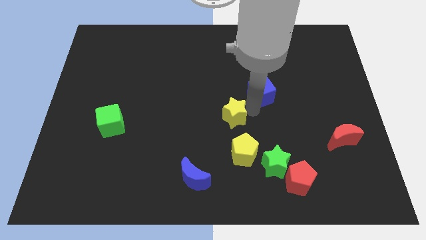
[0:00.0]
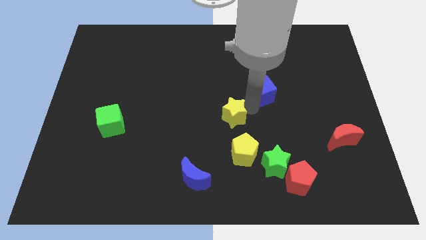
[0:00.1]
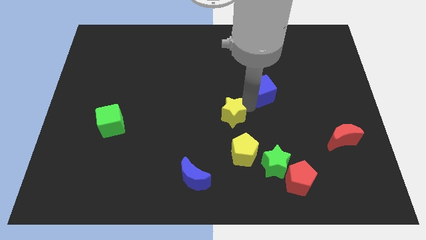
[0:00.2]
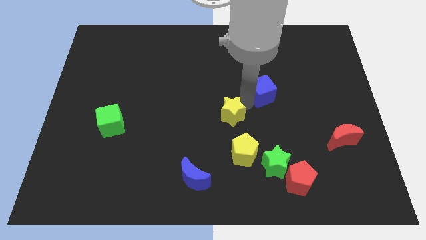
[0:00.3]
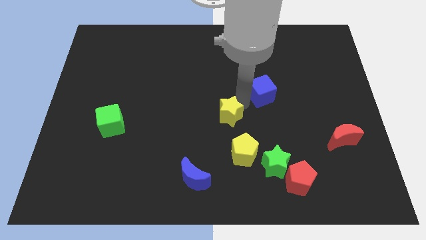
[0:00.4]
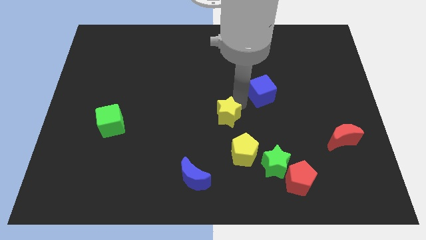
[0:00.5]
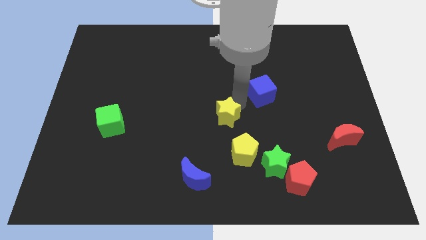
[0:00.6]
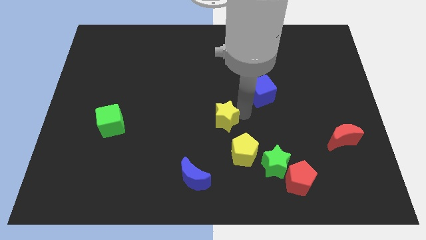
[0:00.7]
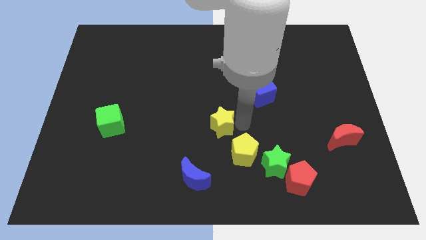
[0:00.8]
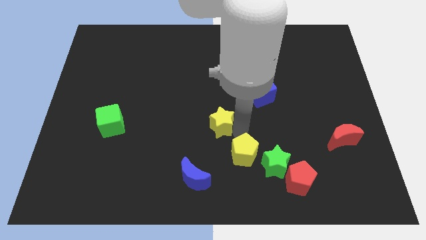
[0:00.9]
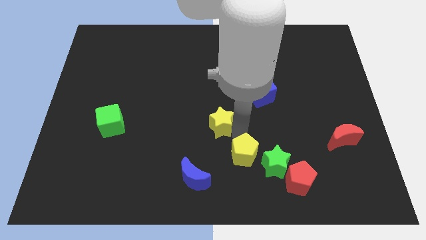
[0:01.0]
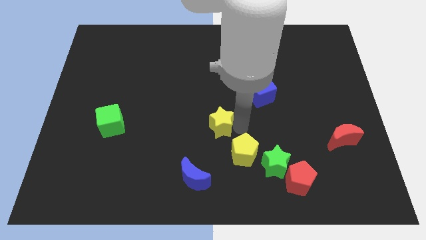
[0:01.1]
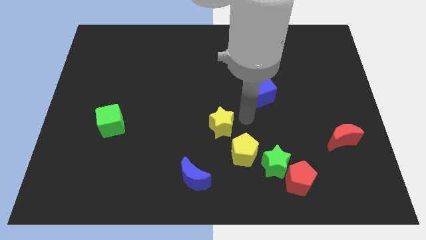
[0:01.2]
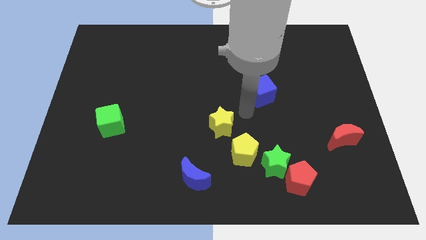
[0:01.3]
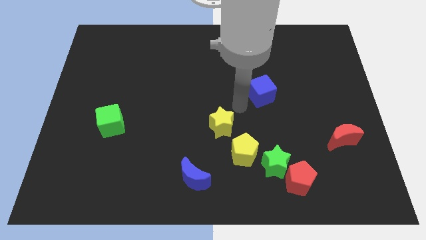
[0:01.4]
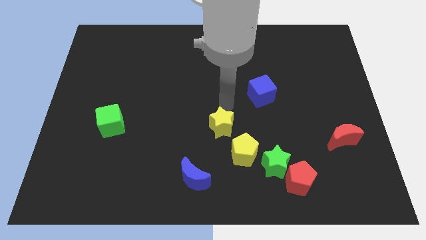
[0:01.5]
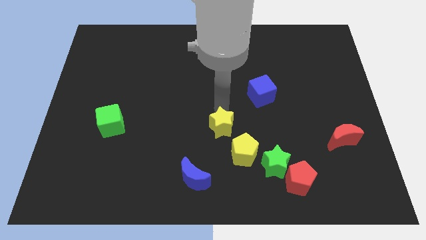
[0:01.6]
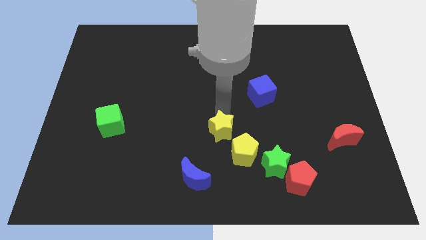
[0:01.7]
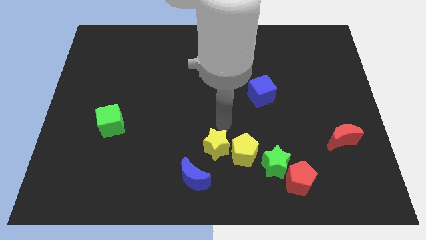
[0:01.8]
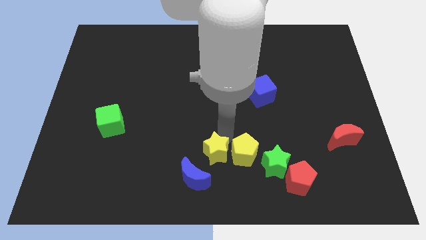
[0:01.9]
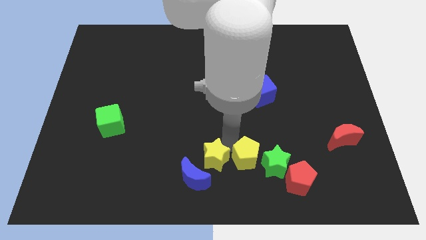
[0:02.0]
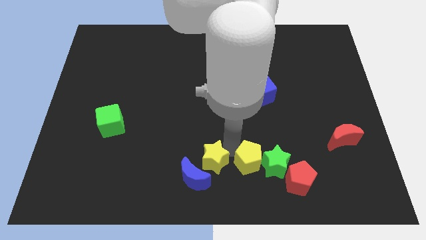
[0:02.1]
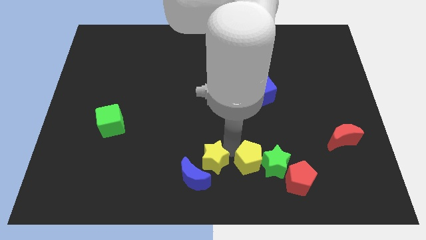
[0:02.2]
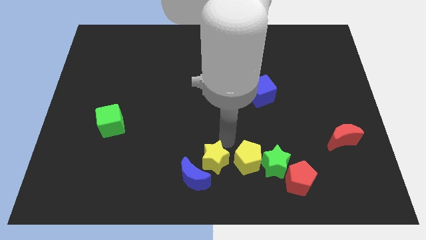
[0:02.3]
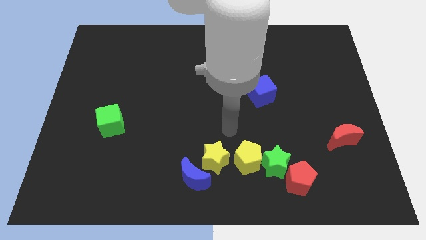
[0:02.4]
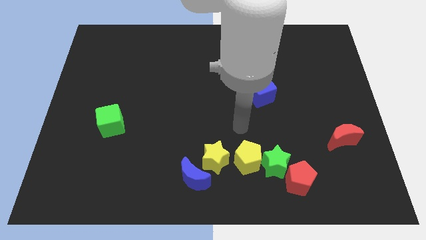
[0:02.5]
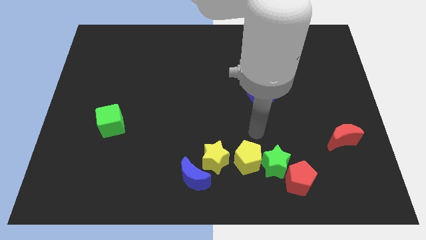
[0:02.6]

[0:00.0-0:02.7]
push the yellow star left to the yellow pentagon

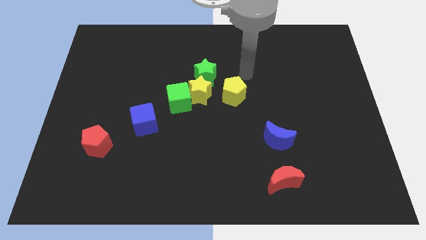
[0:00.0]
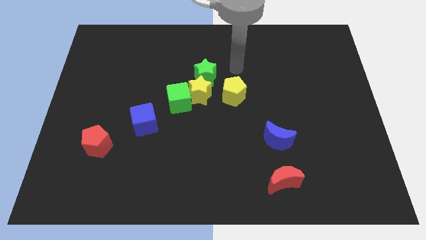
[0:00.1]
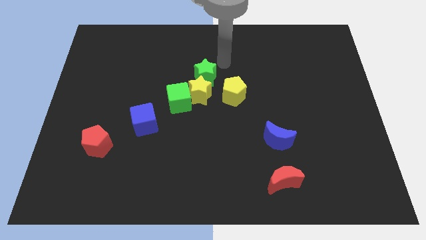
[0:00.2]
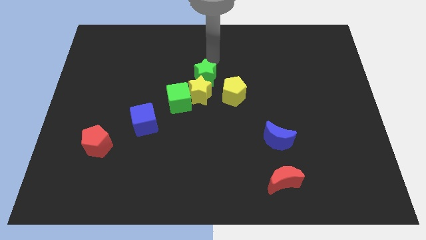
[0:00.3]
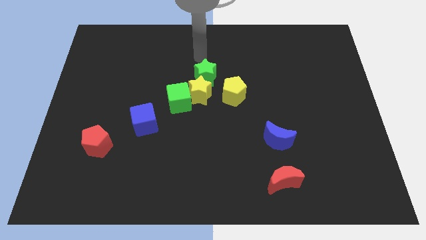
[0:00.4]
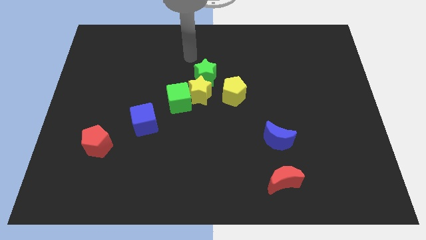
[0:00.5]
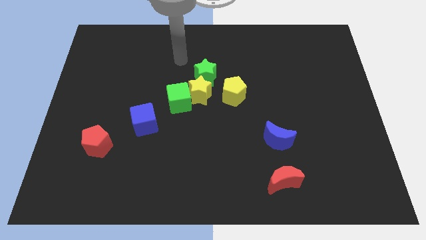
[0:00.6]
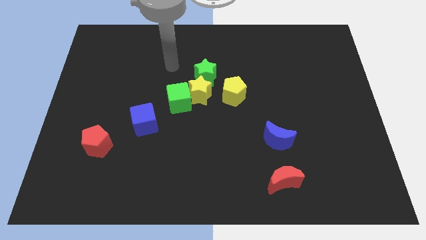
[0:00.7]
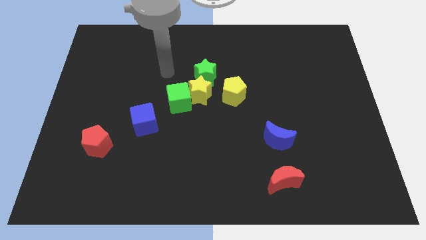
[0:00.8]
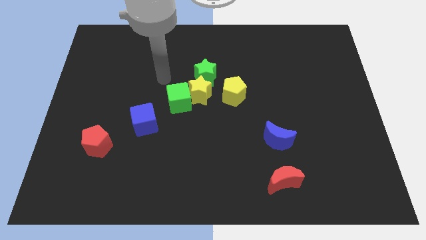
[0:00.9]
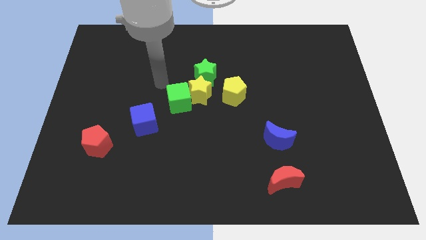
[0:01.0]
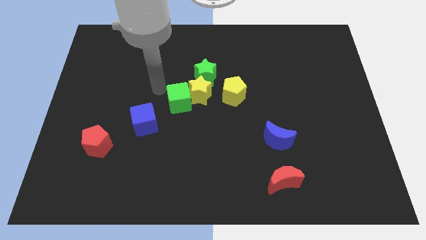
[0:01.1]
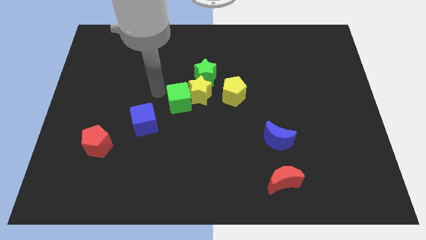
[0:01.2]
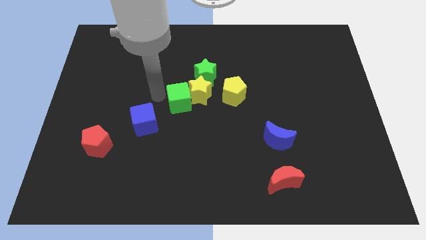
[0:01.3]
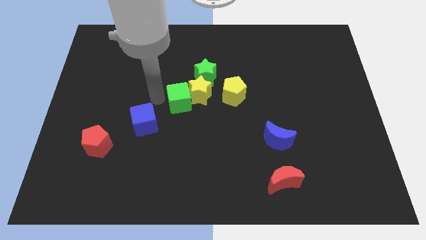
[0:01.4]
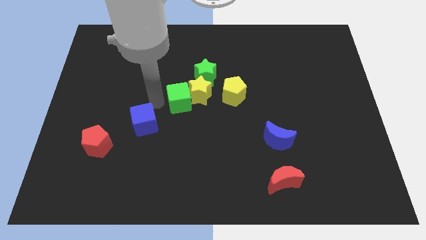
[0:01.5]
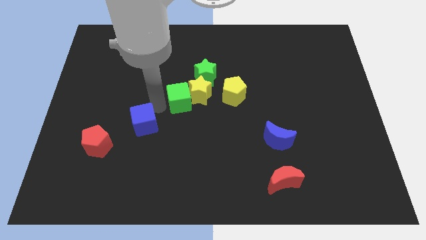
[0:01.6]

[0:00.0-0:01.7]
move your arm towards the left of the green cube

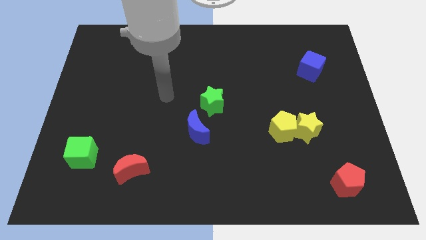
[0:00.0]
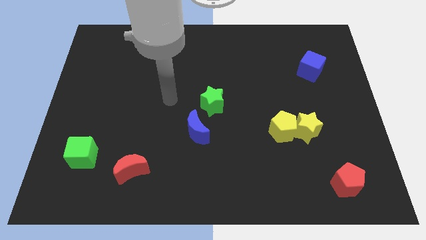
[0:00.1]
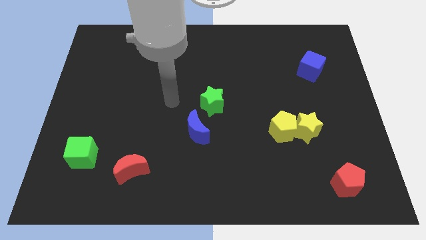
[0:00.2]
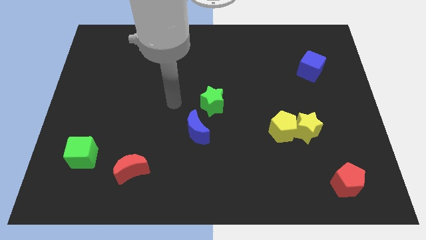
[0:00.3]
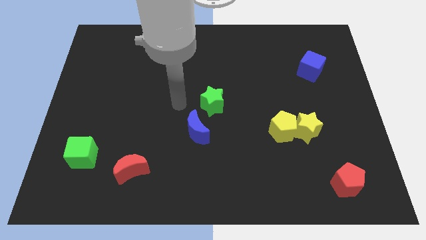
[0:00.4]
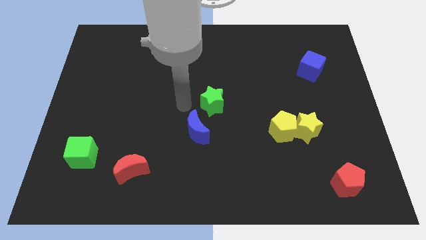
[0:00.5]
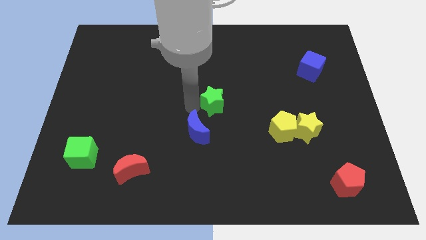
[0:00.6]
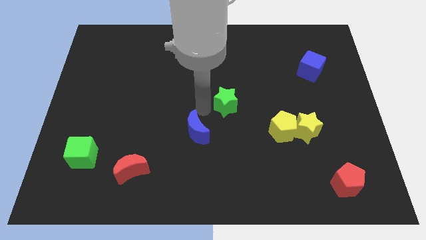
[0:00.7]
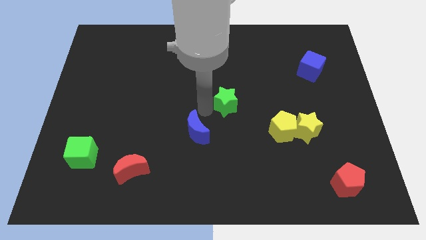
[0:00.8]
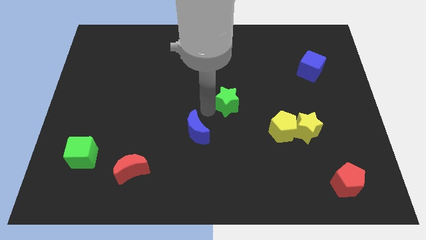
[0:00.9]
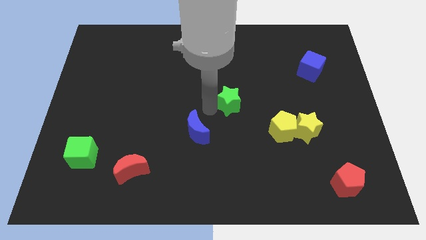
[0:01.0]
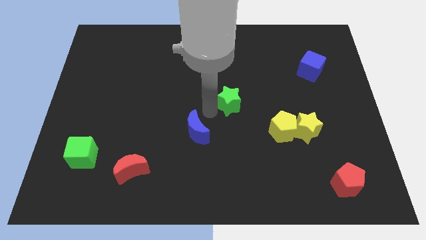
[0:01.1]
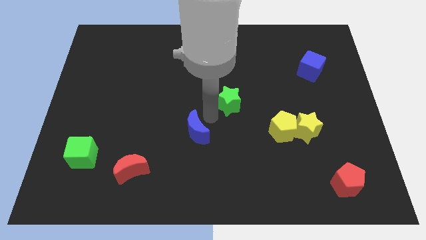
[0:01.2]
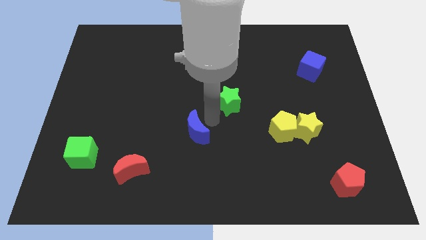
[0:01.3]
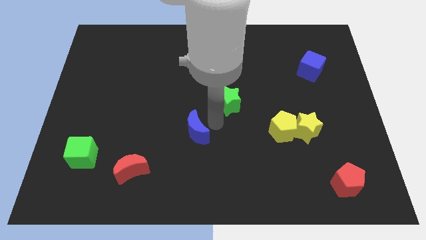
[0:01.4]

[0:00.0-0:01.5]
seperate green star and blue moon

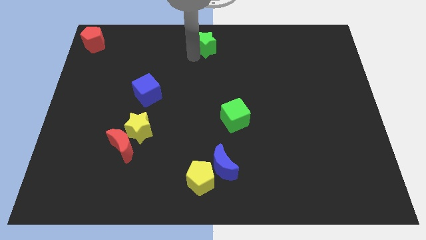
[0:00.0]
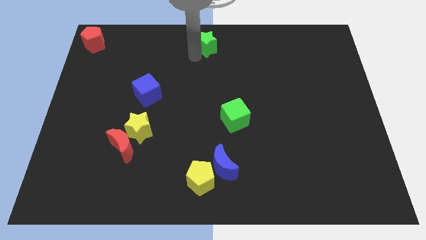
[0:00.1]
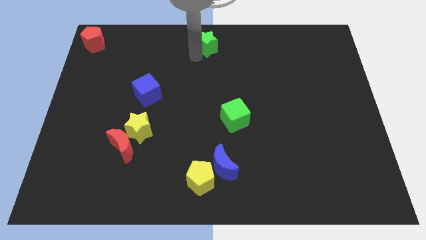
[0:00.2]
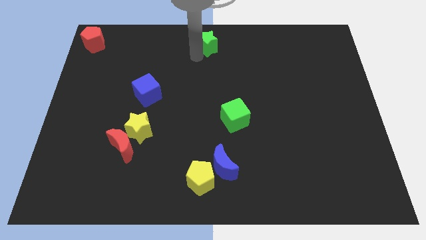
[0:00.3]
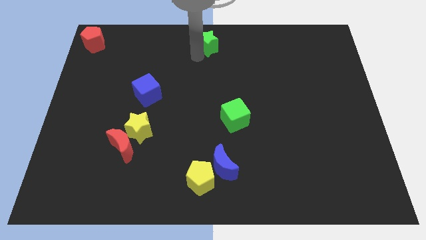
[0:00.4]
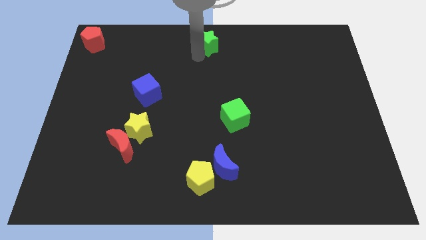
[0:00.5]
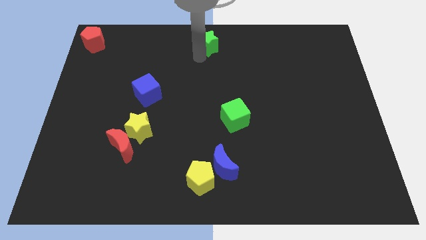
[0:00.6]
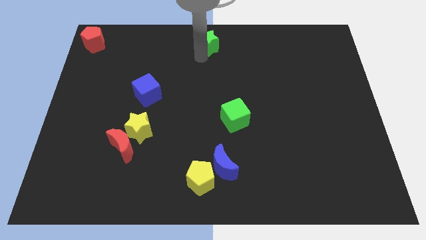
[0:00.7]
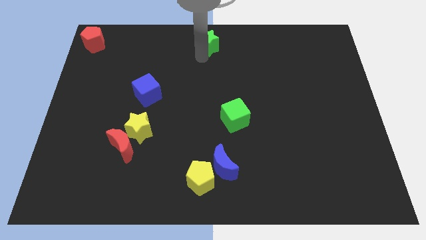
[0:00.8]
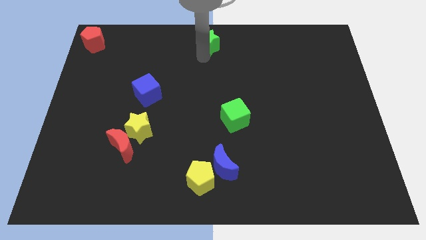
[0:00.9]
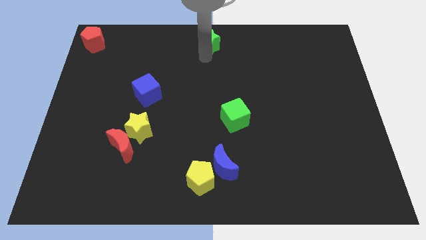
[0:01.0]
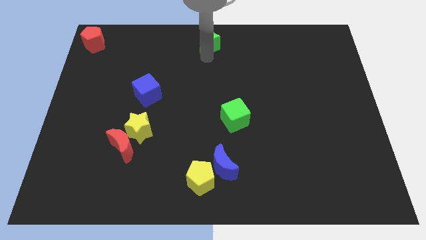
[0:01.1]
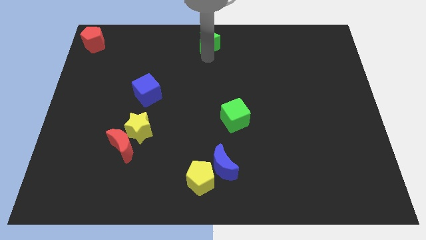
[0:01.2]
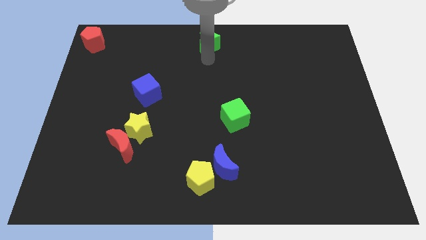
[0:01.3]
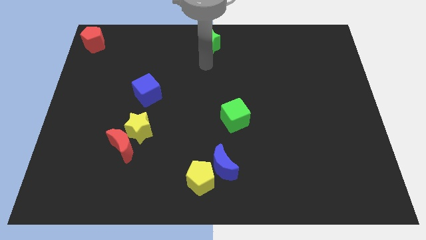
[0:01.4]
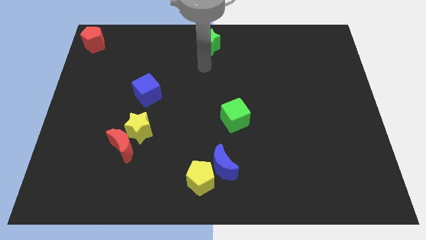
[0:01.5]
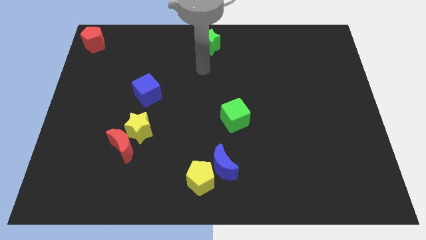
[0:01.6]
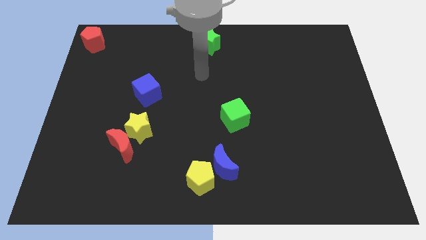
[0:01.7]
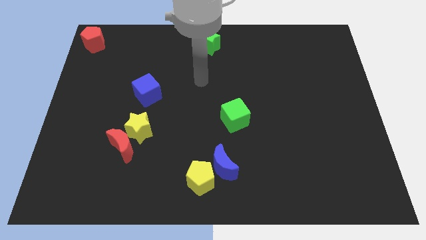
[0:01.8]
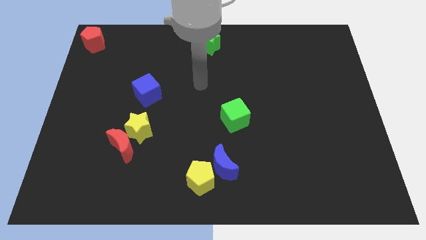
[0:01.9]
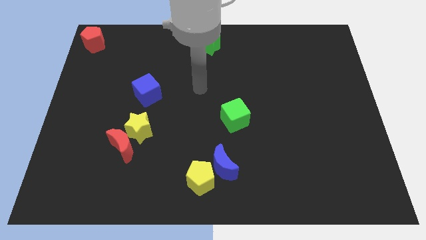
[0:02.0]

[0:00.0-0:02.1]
move green star to the top center

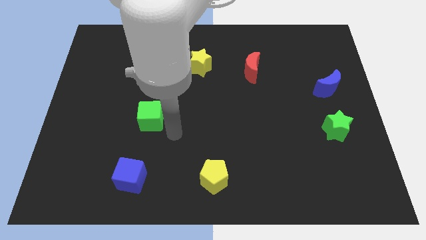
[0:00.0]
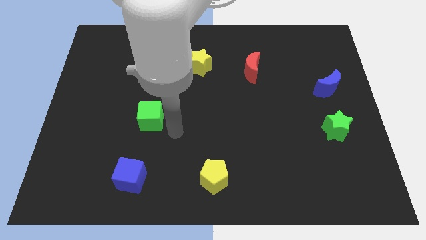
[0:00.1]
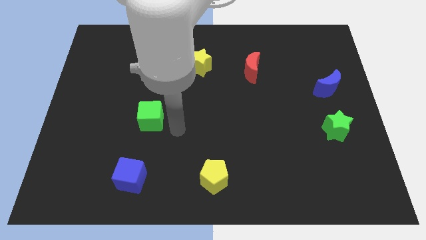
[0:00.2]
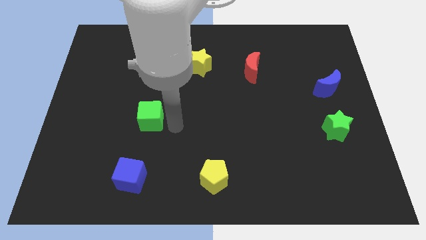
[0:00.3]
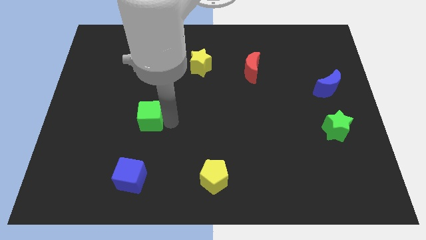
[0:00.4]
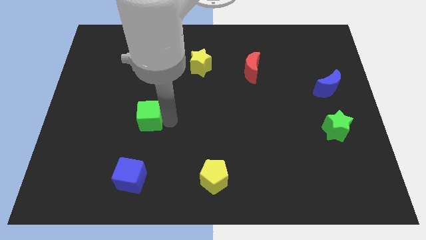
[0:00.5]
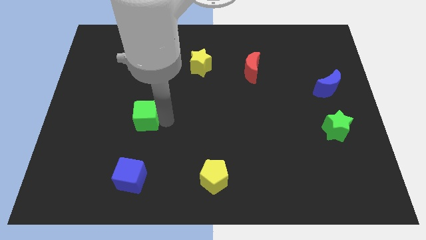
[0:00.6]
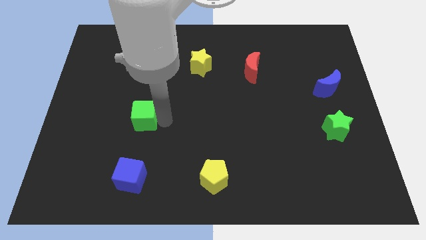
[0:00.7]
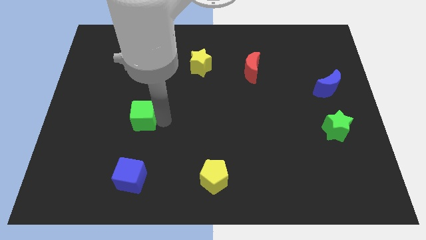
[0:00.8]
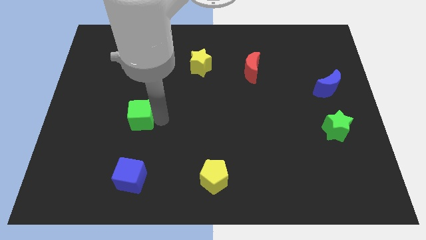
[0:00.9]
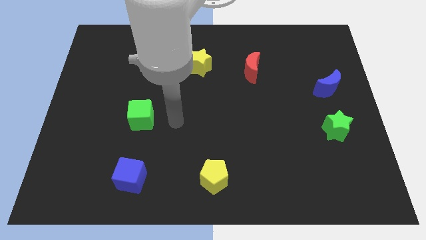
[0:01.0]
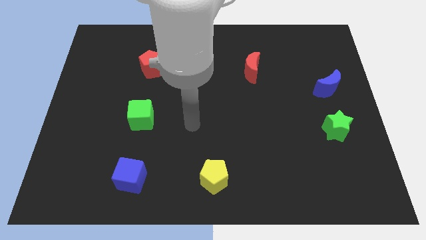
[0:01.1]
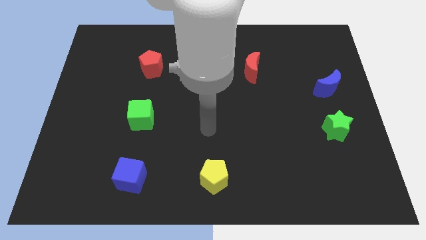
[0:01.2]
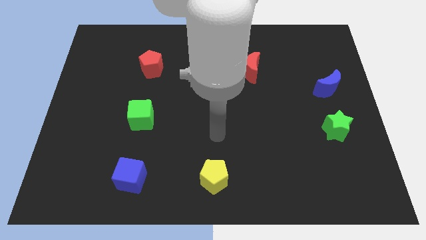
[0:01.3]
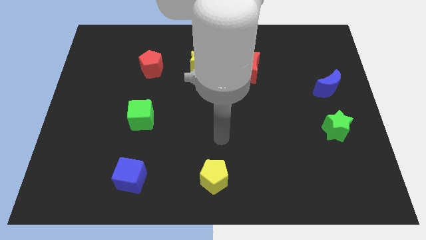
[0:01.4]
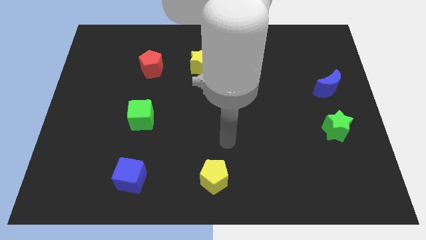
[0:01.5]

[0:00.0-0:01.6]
put the green cube vertically above the blue cube
